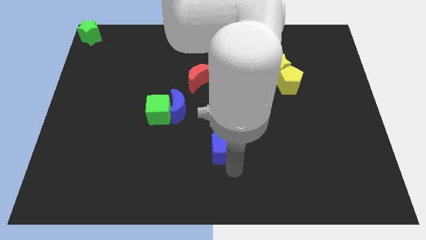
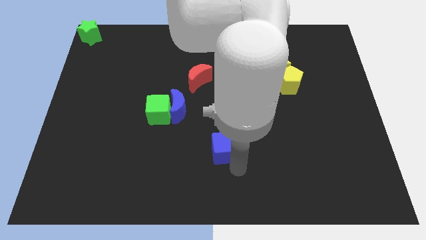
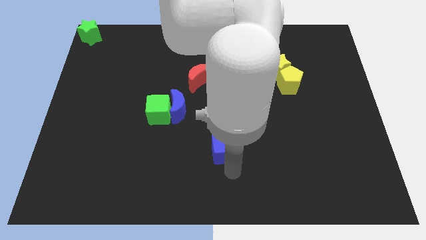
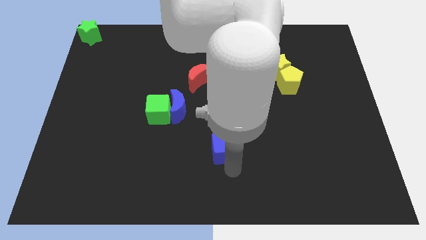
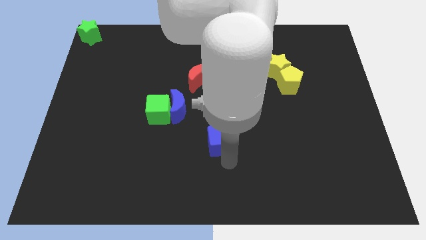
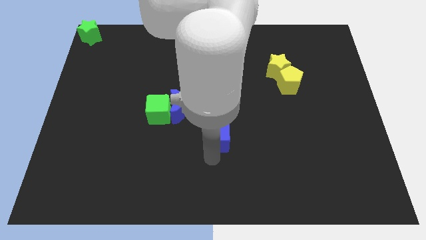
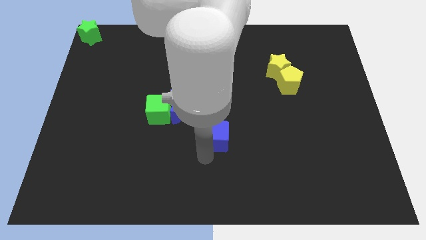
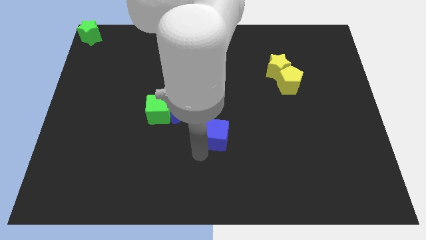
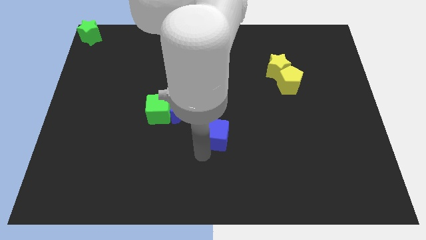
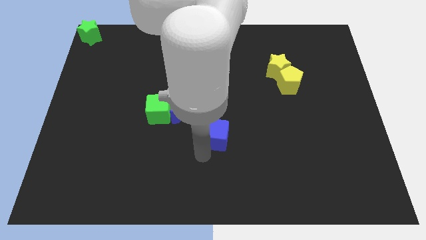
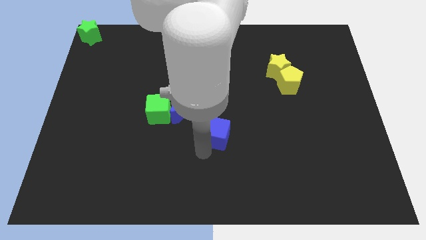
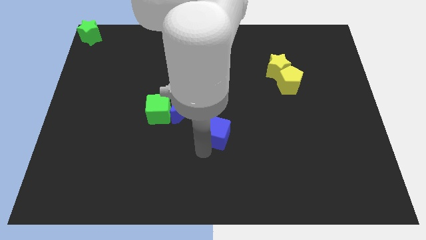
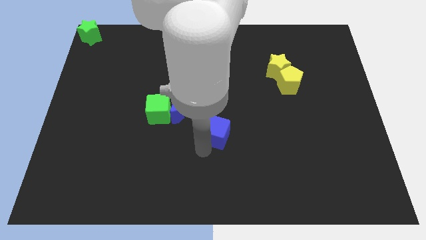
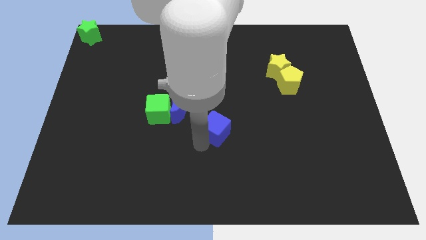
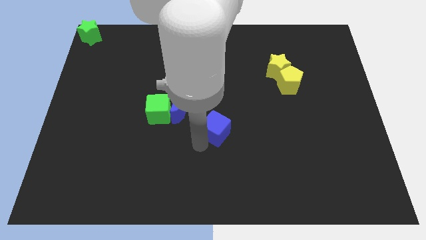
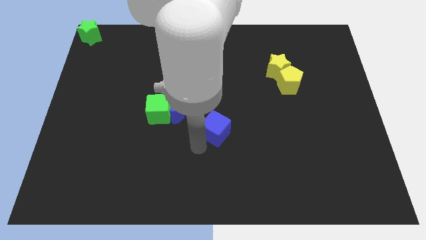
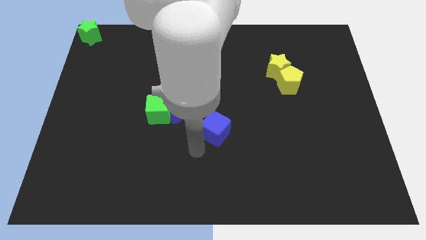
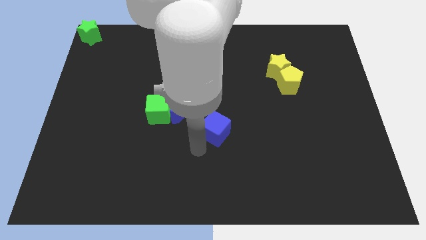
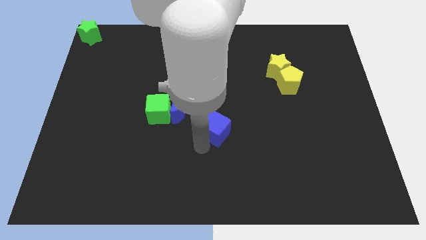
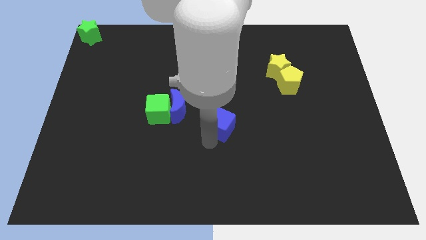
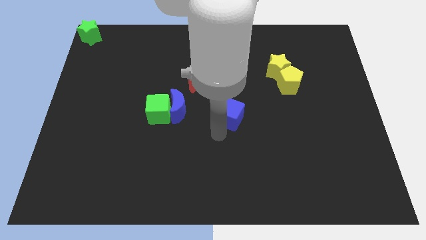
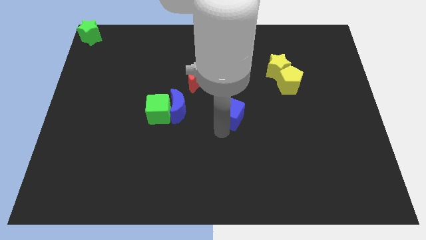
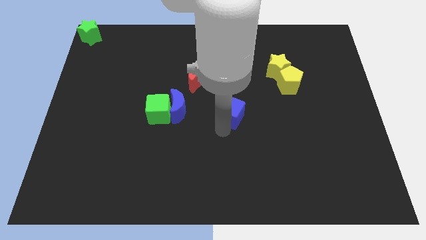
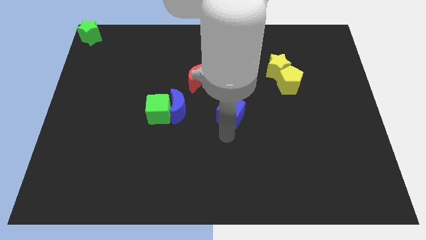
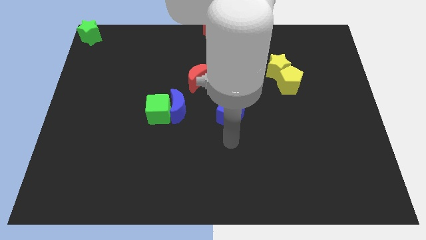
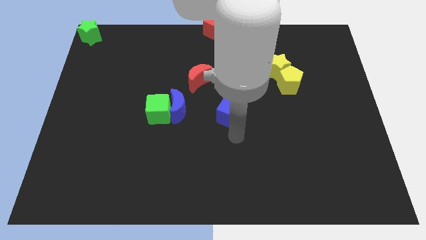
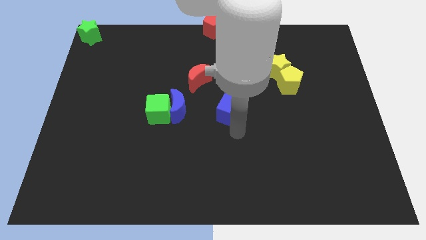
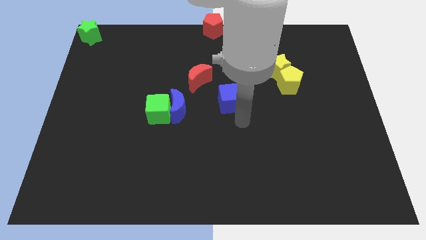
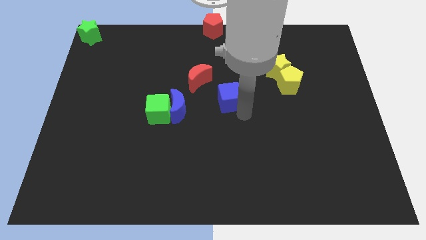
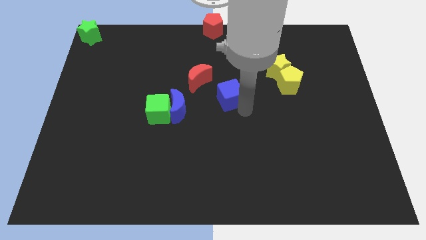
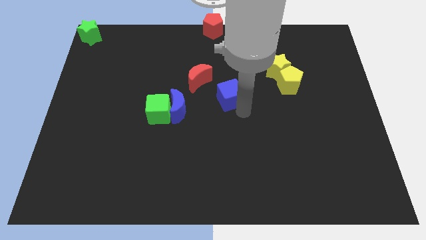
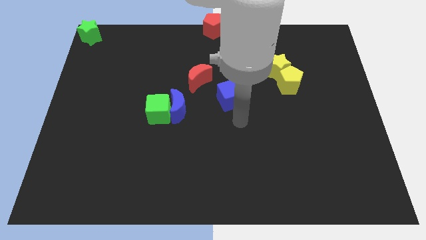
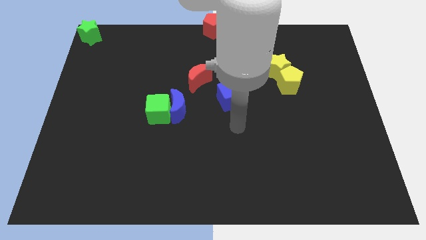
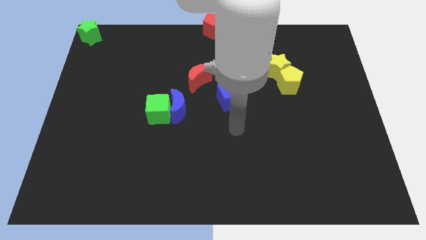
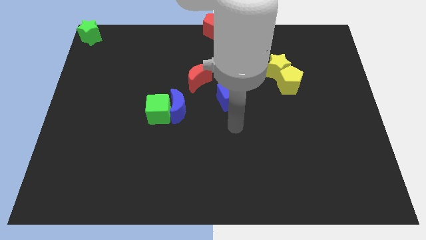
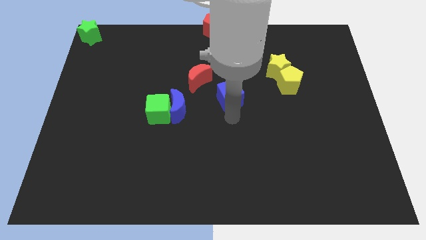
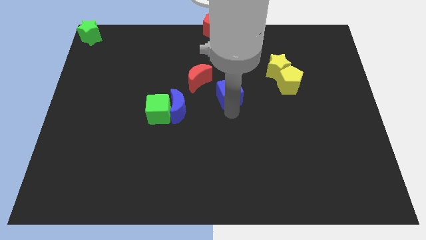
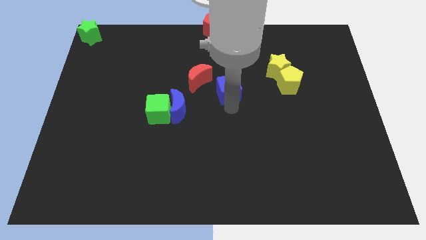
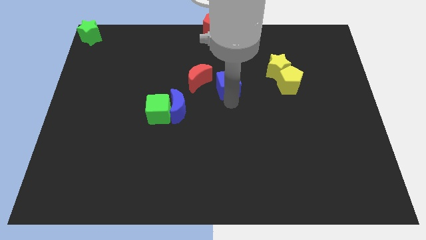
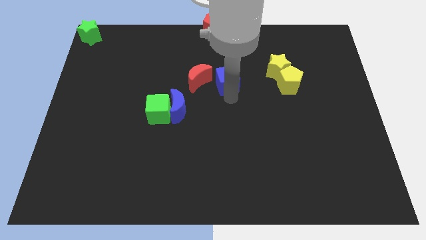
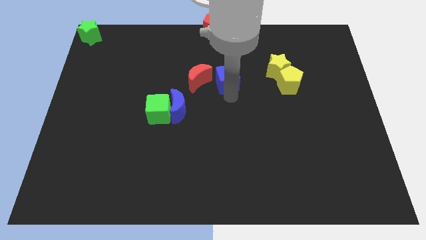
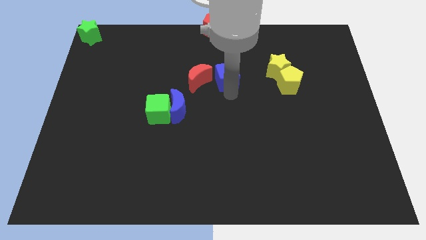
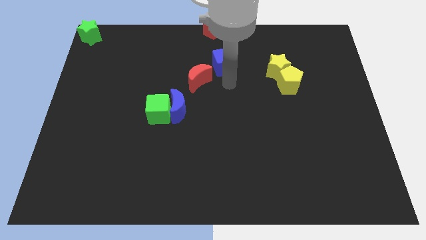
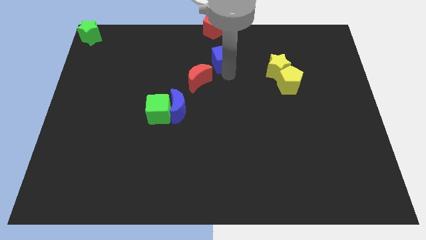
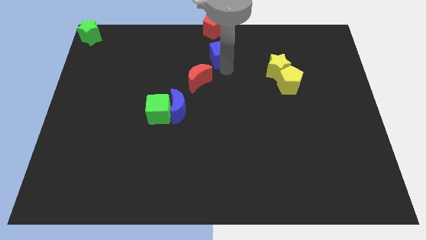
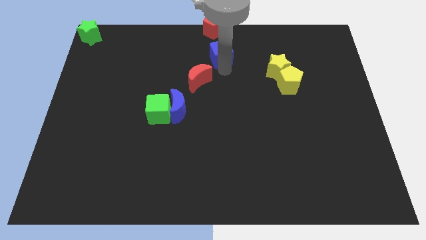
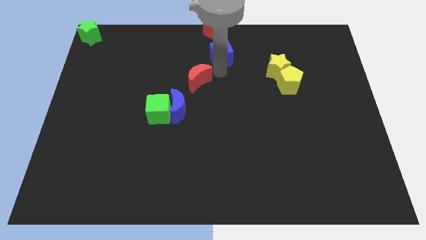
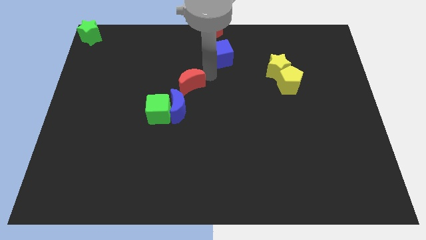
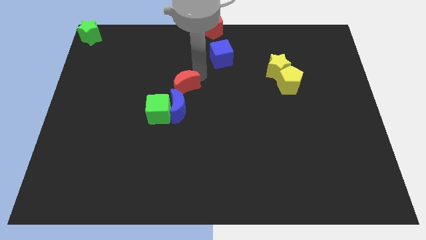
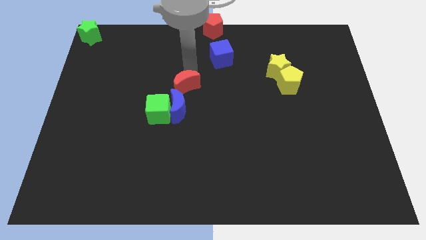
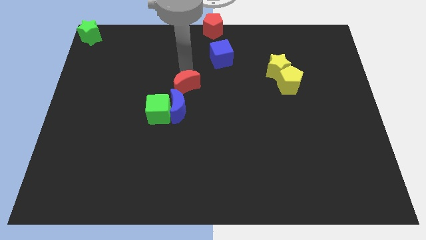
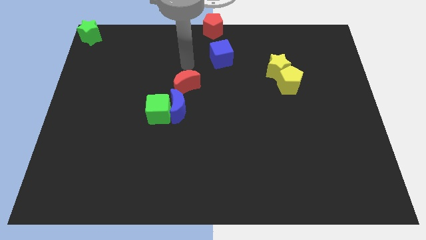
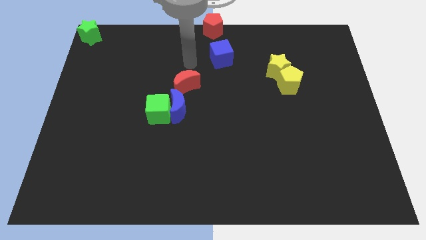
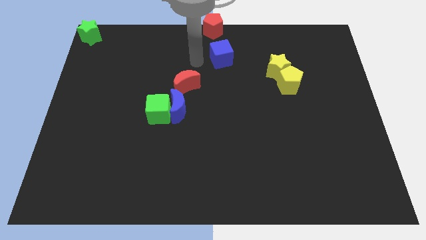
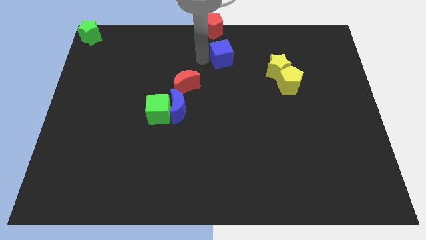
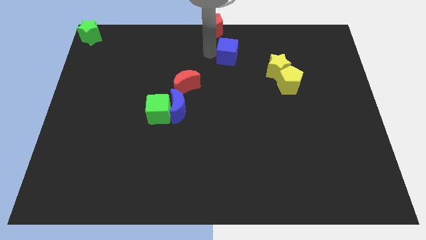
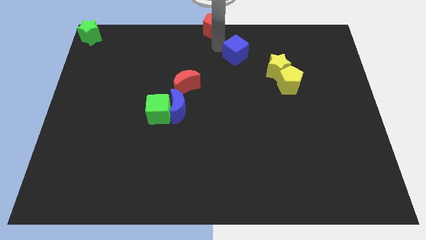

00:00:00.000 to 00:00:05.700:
place the blue cube diagonally right to the red pentagon

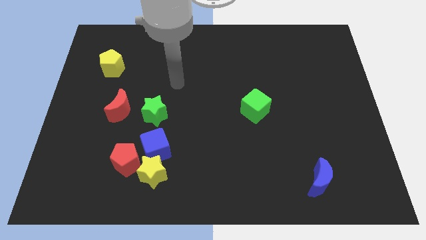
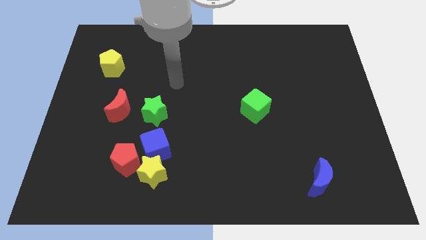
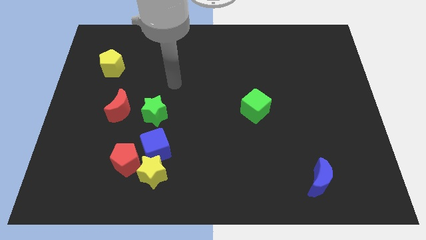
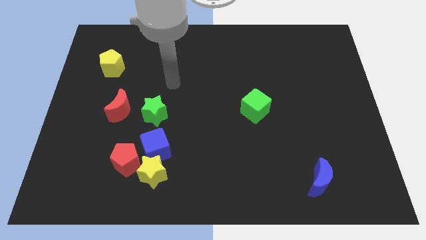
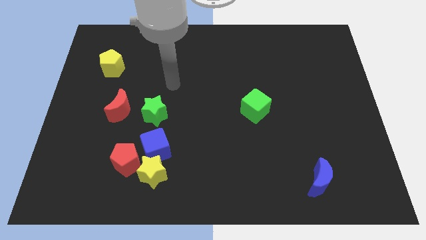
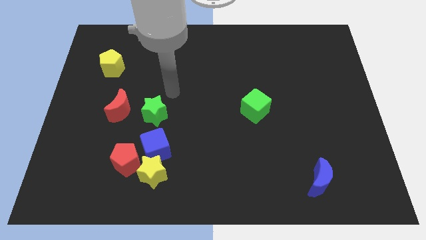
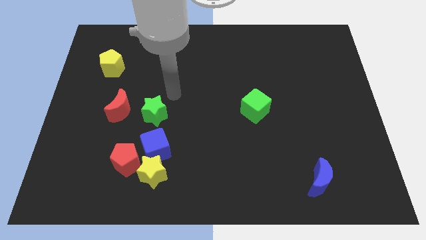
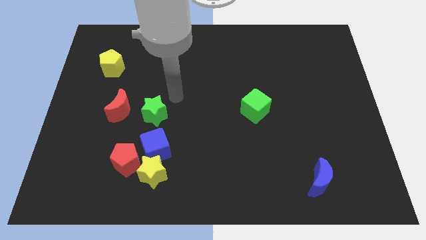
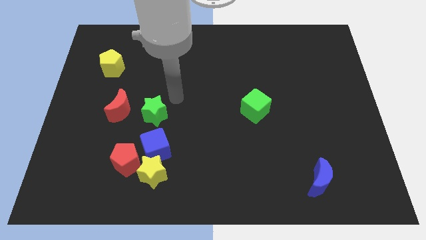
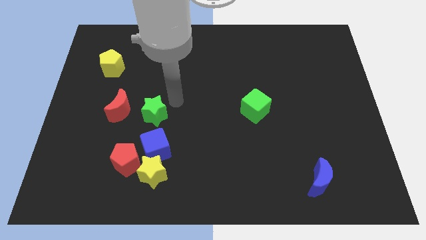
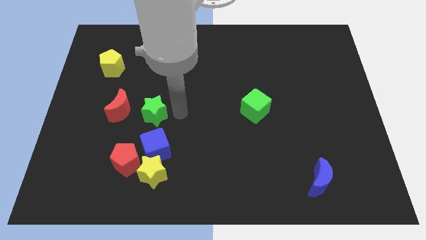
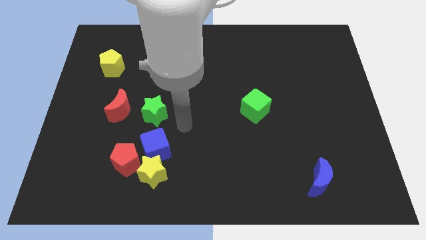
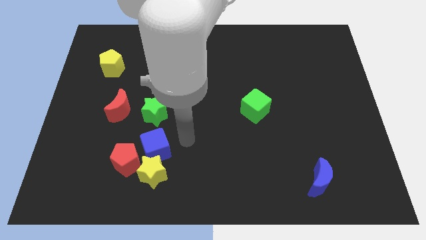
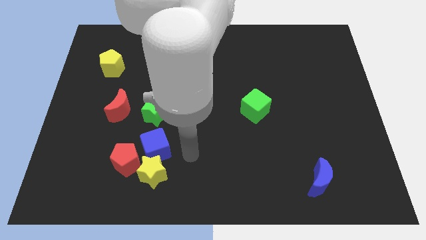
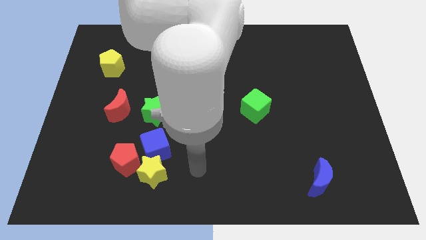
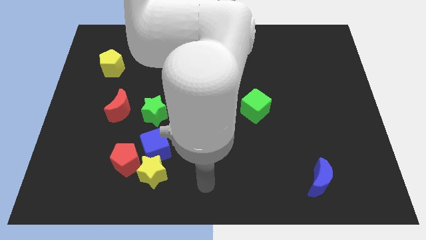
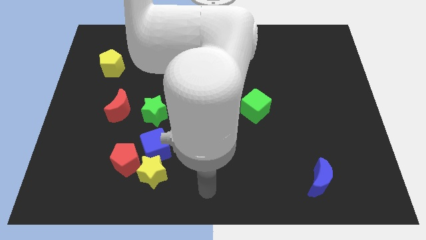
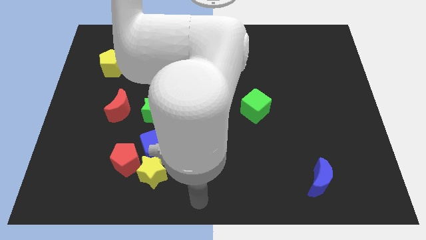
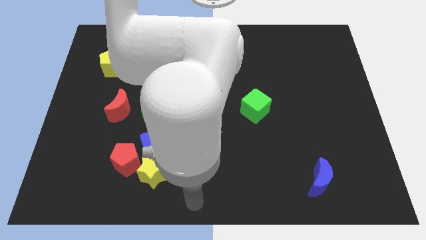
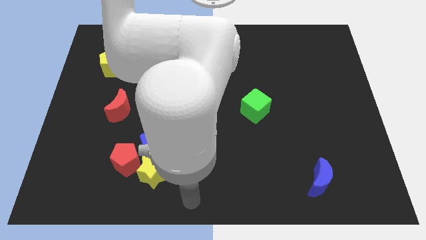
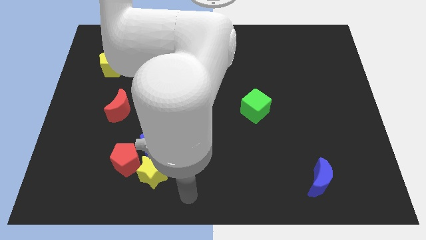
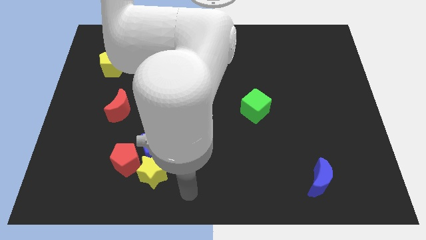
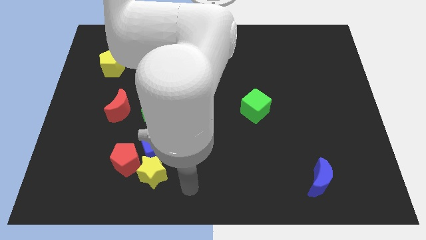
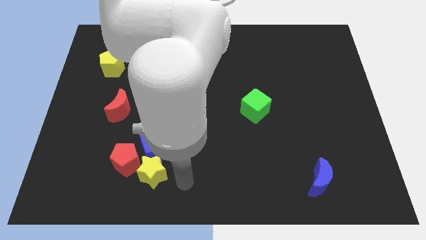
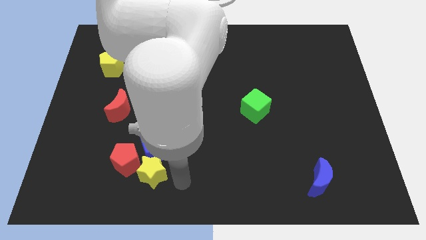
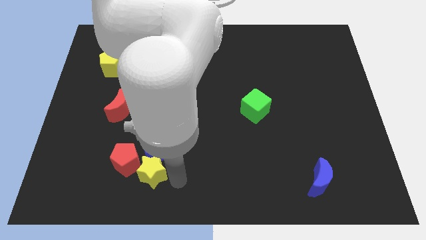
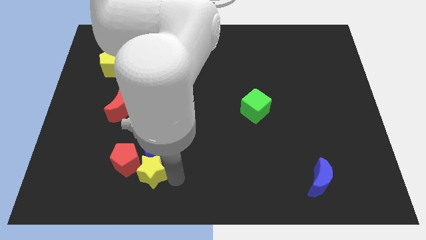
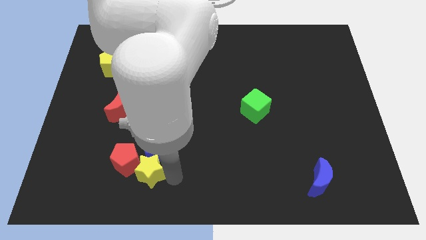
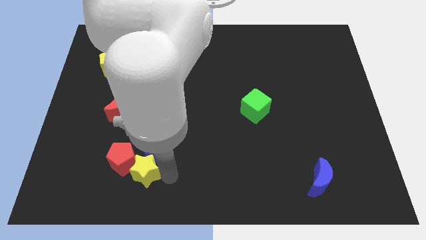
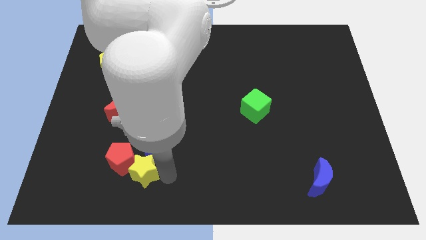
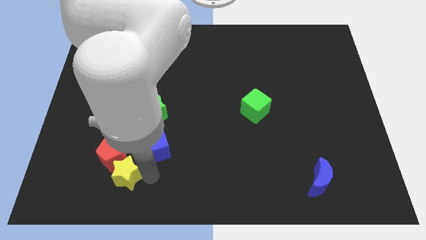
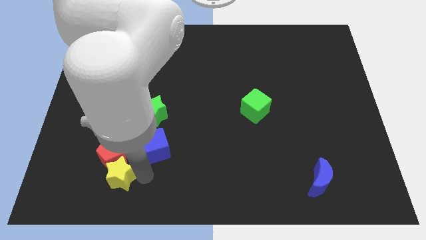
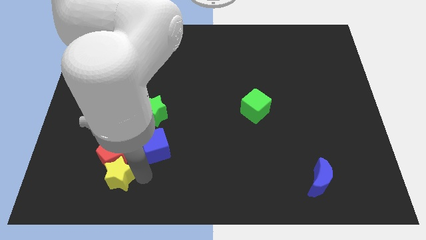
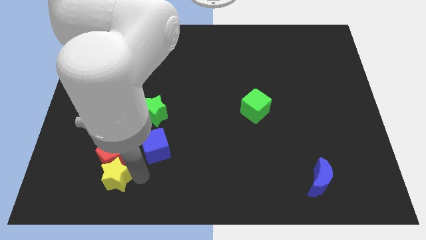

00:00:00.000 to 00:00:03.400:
push the yellow star to the bottom of the bottom of the red pentagon
